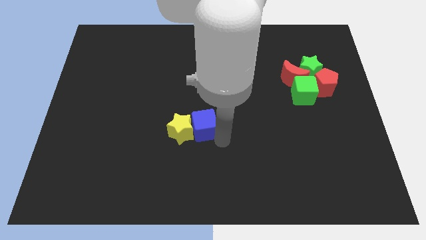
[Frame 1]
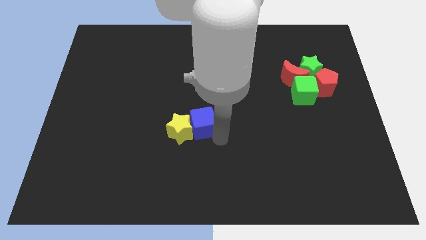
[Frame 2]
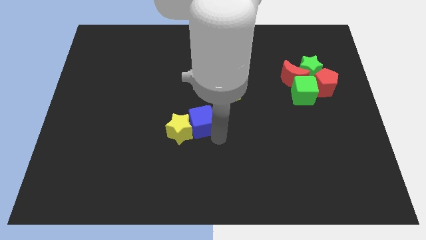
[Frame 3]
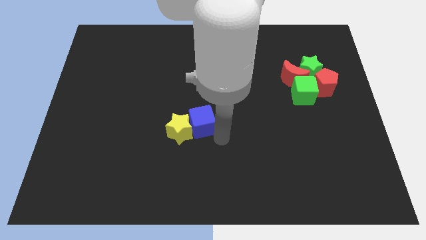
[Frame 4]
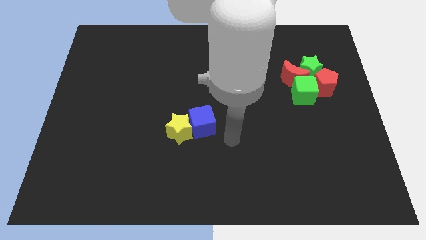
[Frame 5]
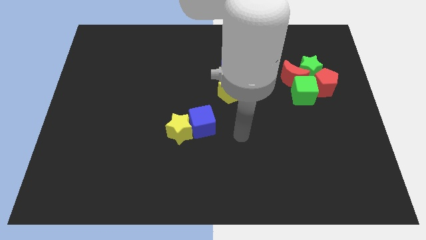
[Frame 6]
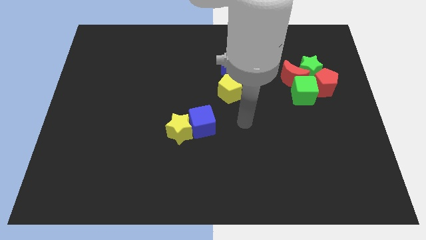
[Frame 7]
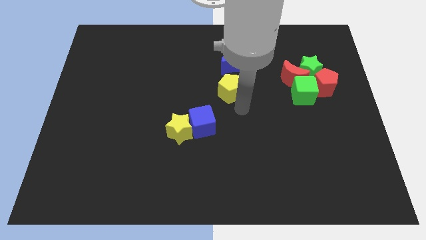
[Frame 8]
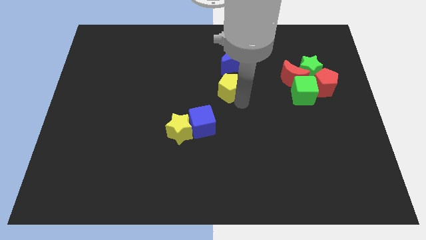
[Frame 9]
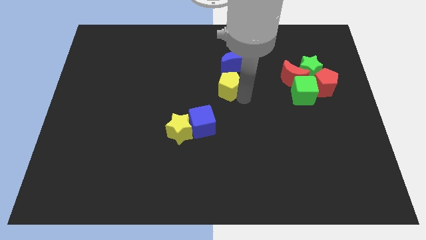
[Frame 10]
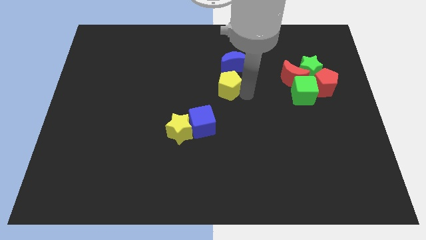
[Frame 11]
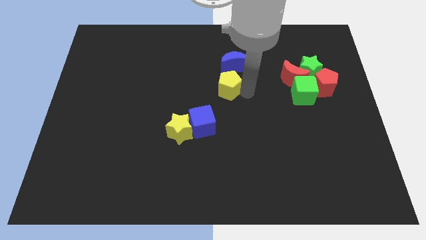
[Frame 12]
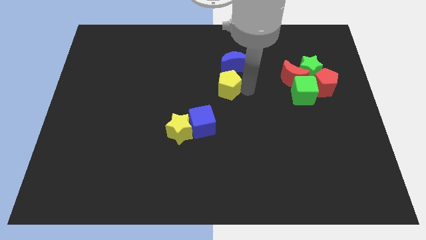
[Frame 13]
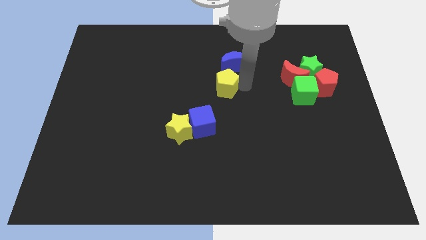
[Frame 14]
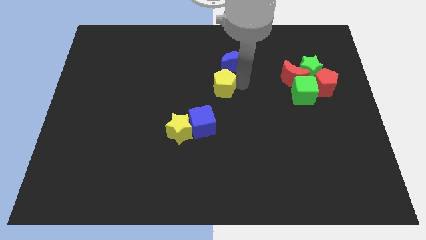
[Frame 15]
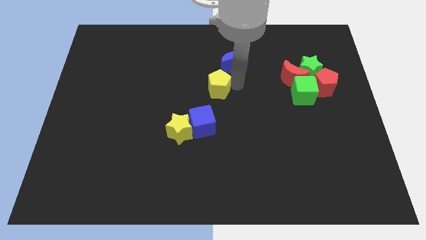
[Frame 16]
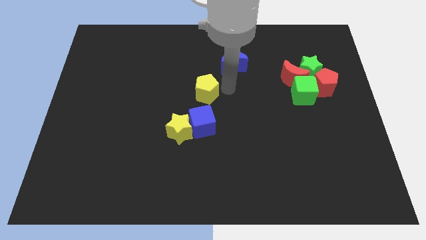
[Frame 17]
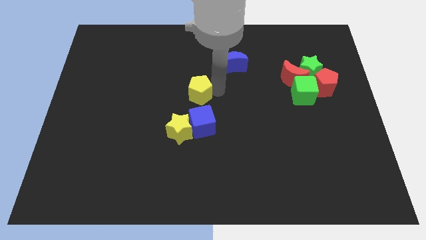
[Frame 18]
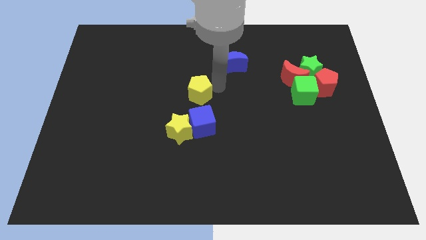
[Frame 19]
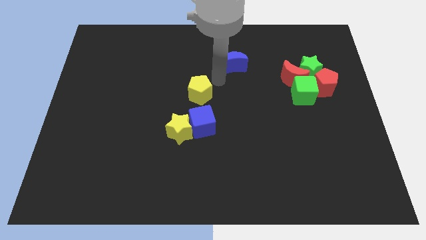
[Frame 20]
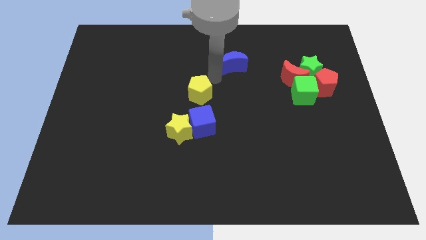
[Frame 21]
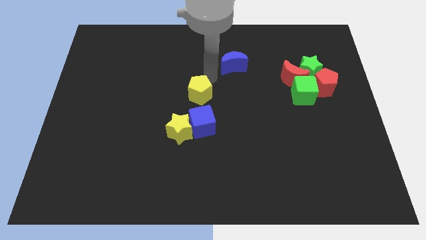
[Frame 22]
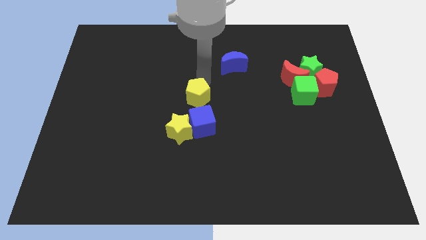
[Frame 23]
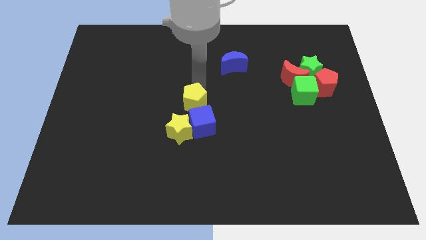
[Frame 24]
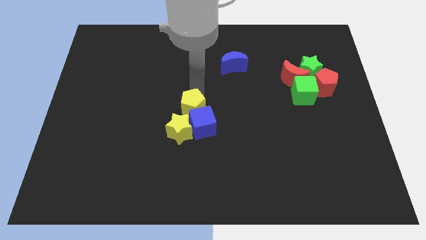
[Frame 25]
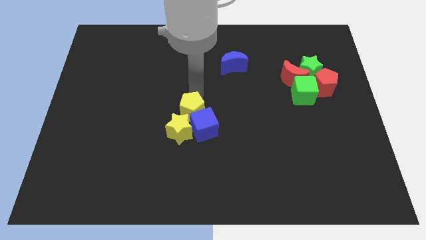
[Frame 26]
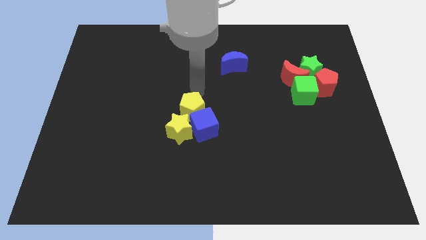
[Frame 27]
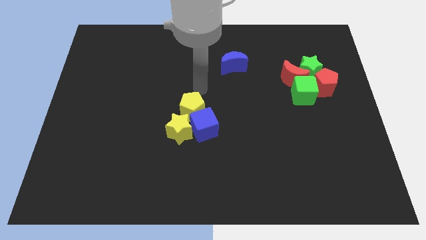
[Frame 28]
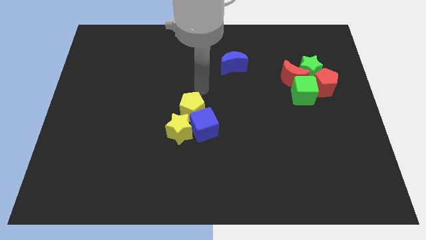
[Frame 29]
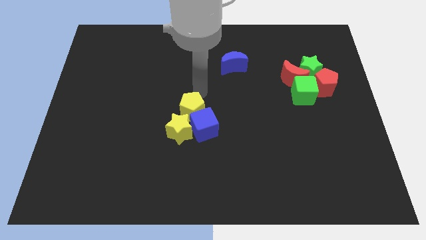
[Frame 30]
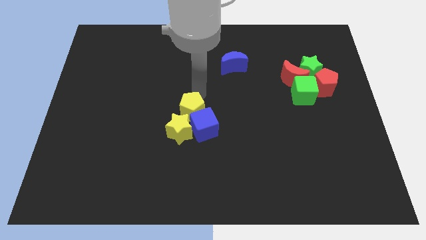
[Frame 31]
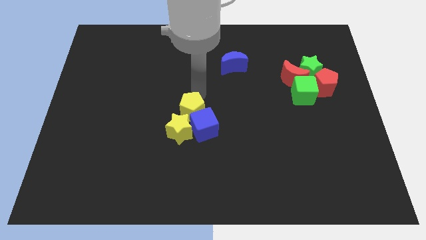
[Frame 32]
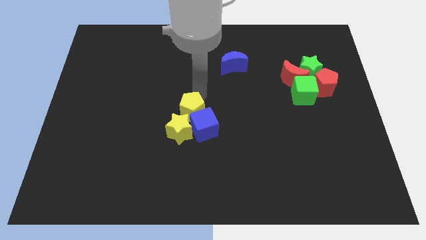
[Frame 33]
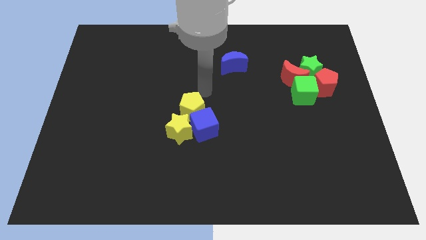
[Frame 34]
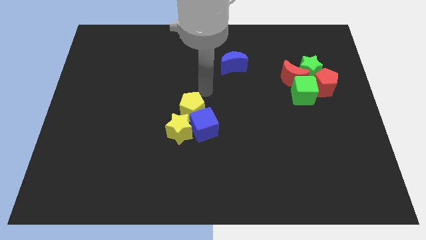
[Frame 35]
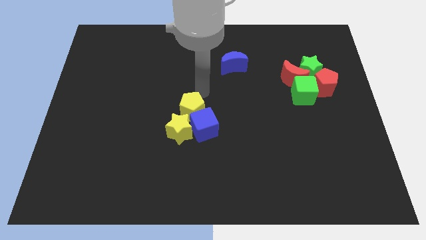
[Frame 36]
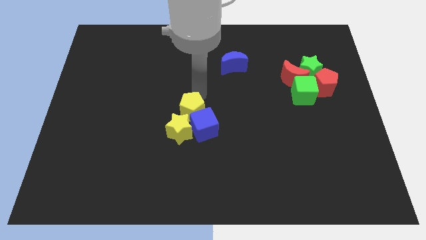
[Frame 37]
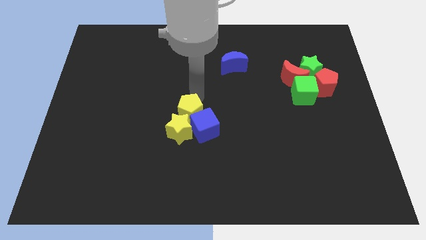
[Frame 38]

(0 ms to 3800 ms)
place the yellow penatgon on top of yellow star and blue cube

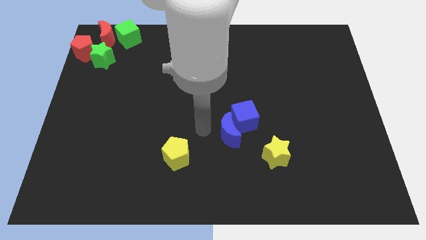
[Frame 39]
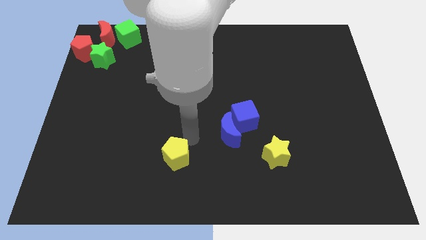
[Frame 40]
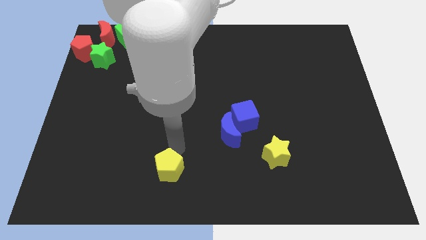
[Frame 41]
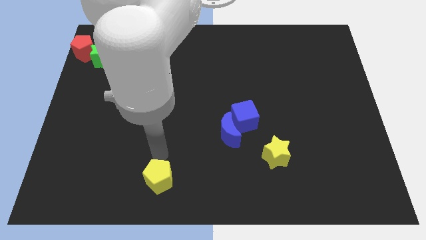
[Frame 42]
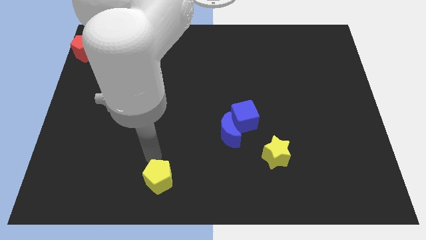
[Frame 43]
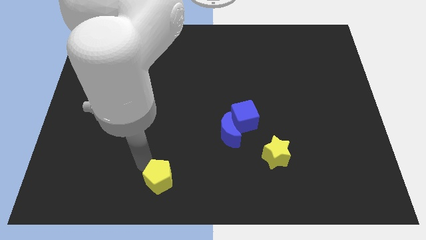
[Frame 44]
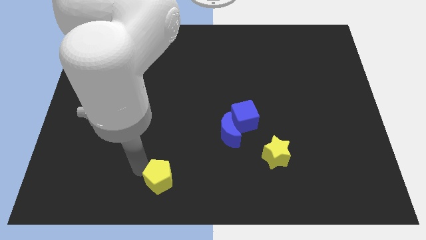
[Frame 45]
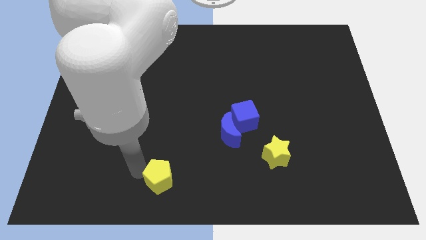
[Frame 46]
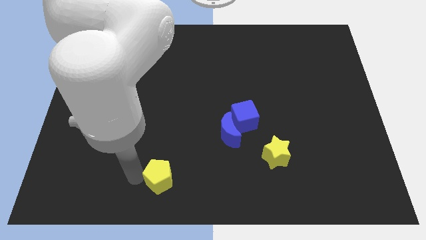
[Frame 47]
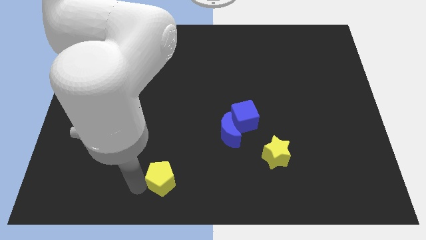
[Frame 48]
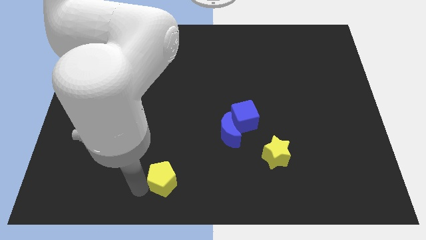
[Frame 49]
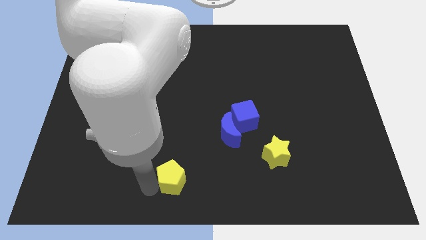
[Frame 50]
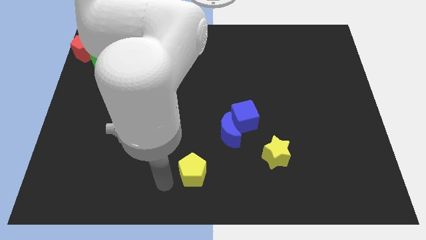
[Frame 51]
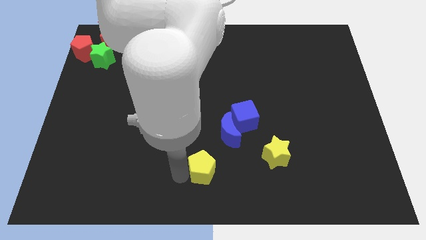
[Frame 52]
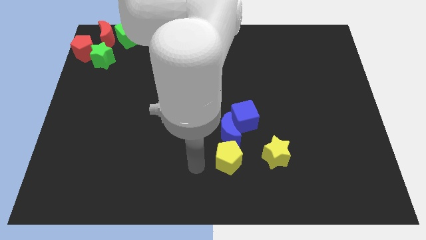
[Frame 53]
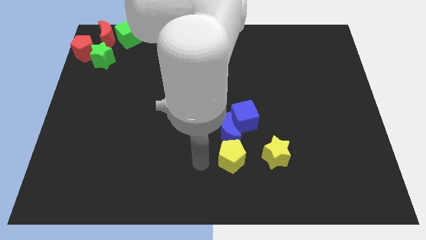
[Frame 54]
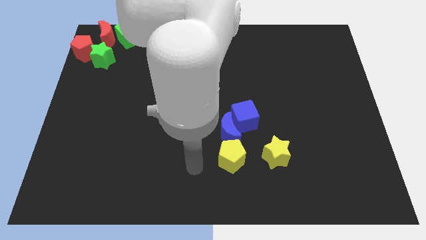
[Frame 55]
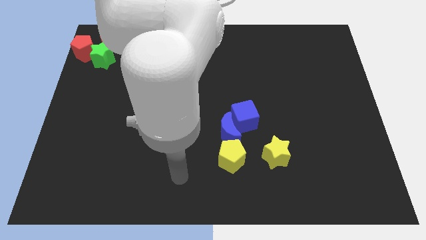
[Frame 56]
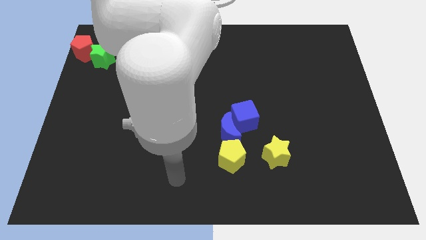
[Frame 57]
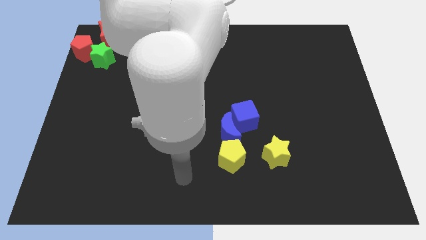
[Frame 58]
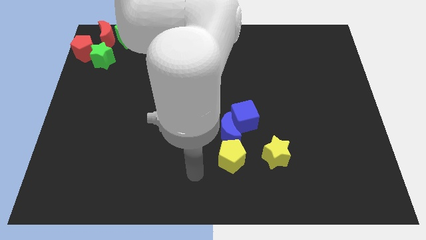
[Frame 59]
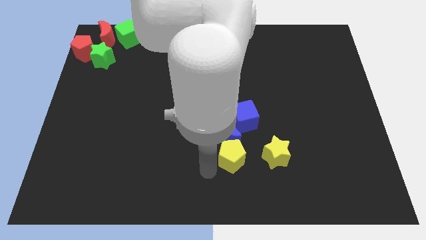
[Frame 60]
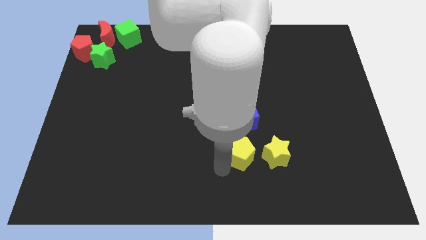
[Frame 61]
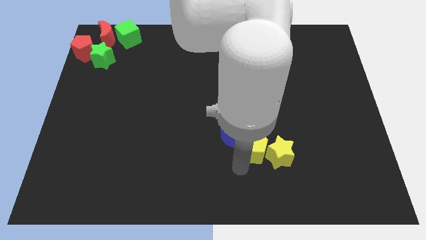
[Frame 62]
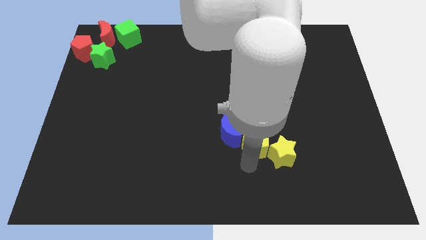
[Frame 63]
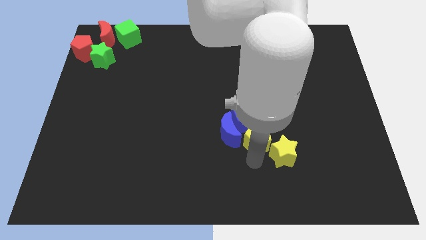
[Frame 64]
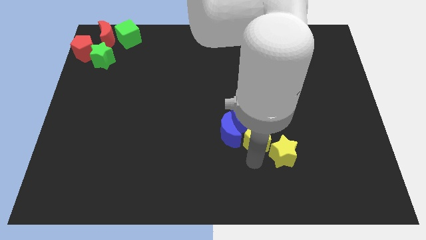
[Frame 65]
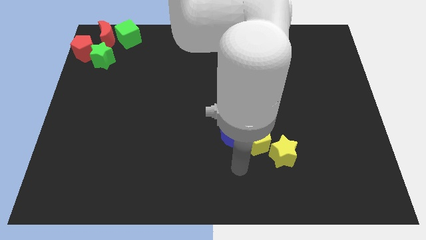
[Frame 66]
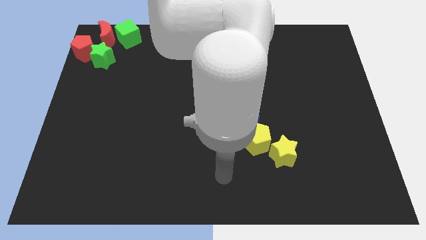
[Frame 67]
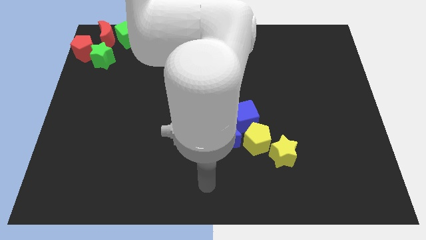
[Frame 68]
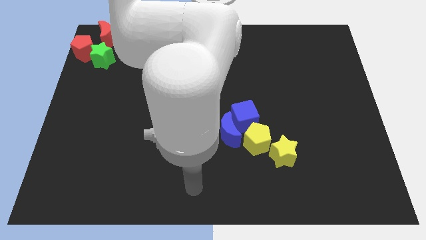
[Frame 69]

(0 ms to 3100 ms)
push yellow pentagon into the yellow star

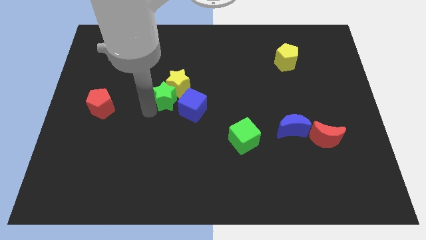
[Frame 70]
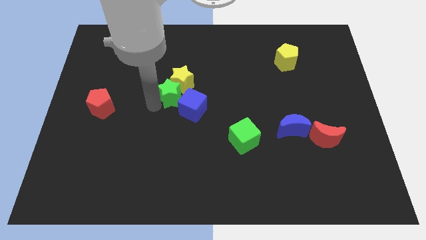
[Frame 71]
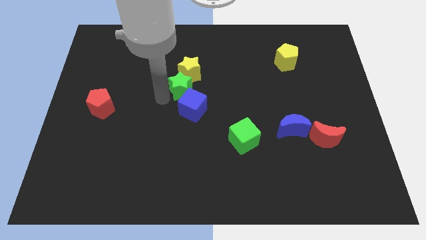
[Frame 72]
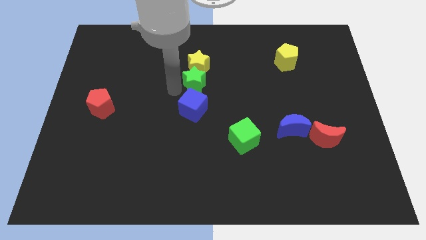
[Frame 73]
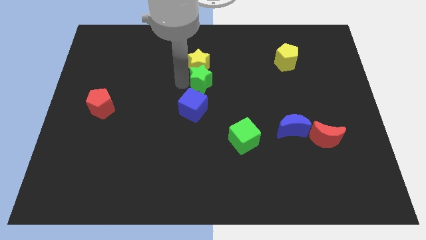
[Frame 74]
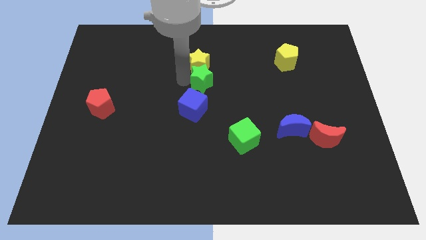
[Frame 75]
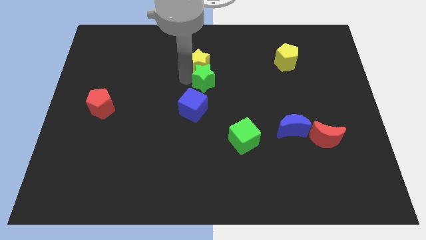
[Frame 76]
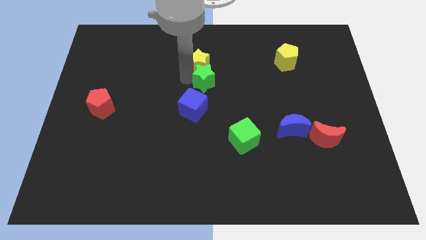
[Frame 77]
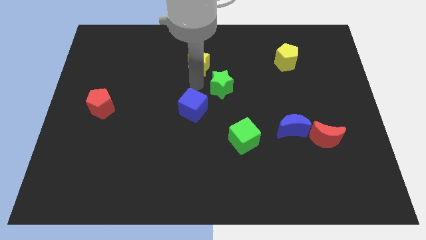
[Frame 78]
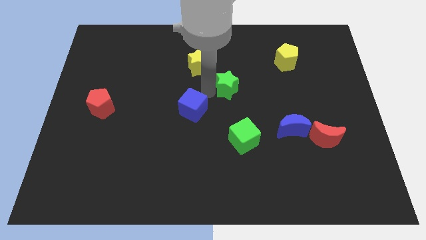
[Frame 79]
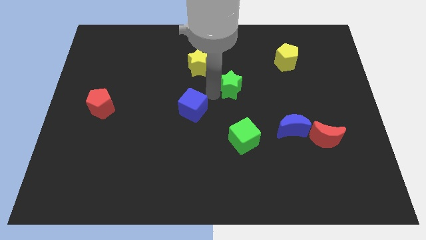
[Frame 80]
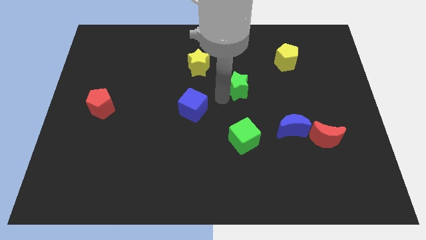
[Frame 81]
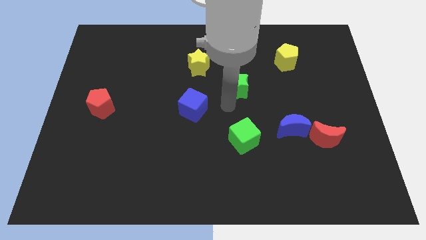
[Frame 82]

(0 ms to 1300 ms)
push the green star above the green cube

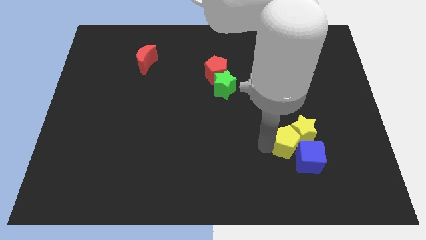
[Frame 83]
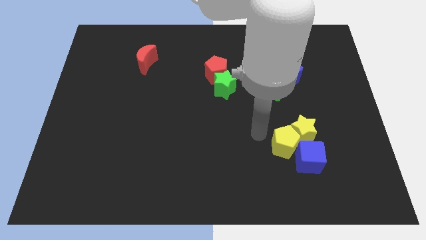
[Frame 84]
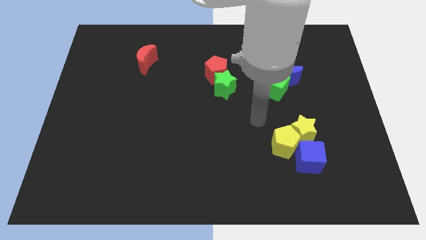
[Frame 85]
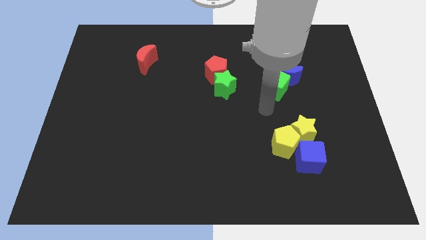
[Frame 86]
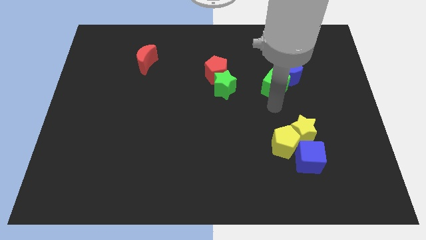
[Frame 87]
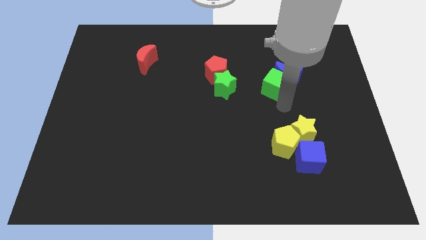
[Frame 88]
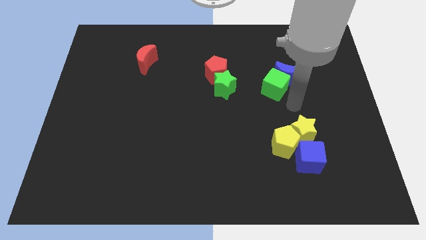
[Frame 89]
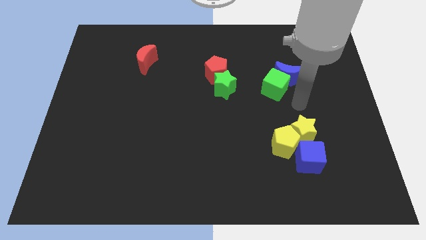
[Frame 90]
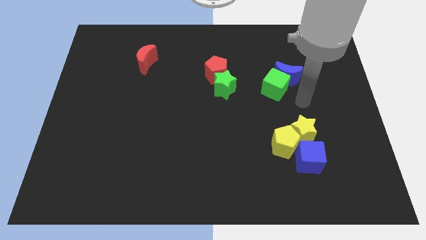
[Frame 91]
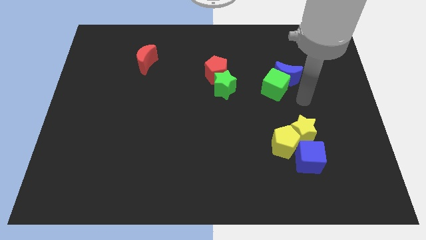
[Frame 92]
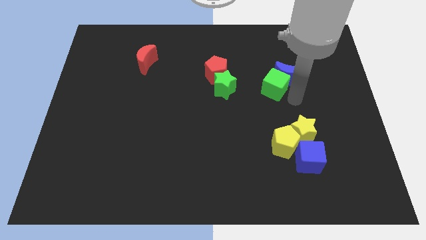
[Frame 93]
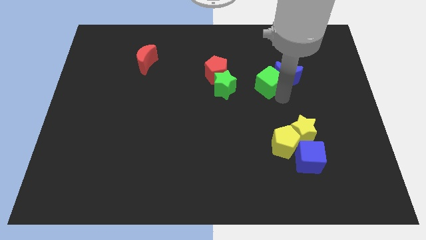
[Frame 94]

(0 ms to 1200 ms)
move your arm away from the yellow pentagon
